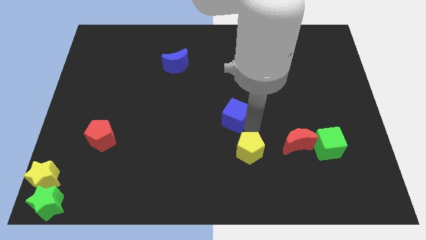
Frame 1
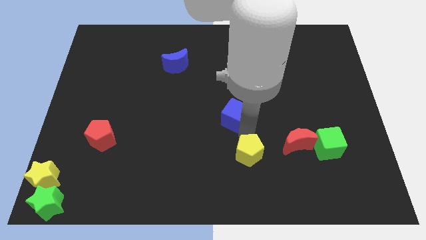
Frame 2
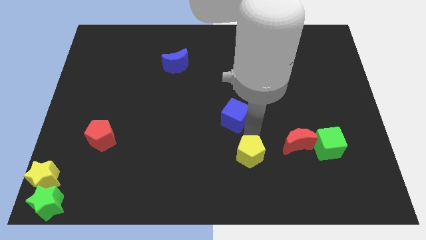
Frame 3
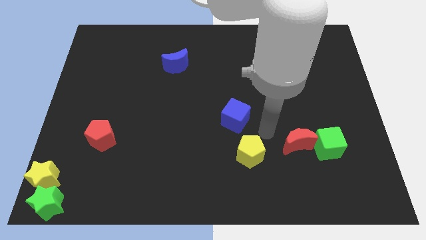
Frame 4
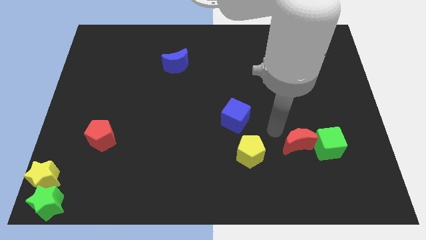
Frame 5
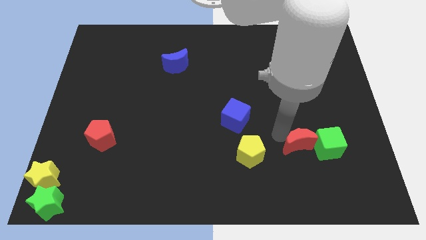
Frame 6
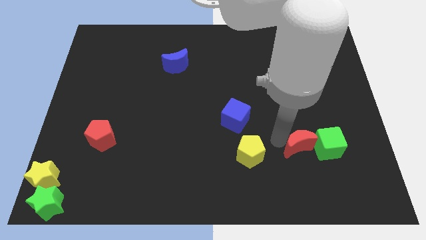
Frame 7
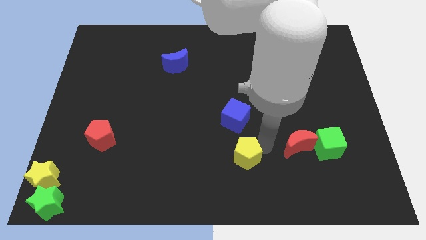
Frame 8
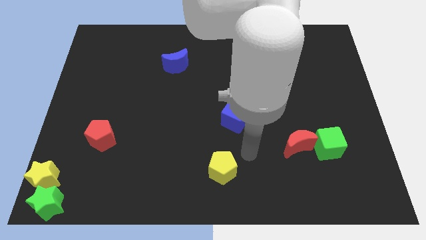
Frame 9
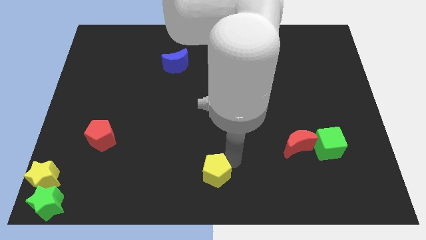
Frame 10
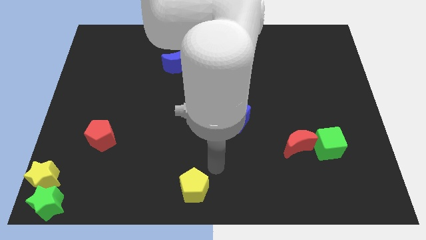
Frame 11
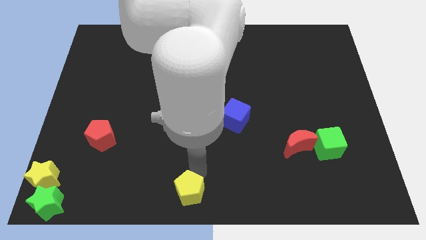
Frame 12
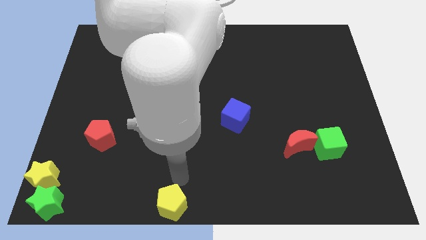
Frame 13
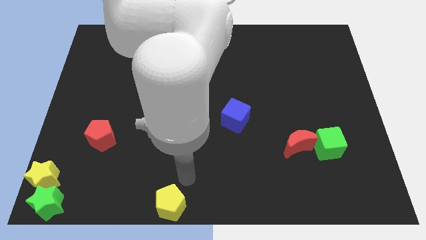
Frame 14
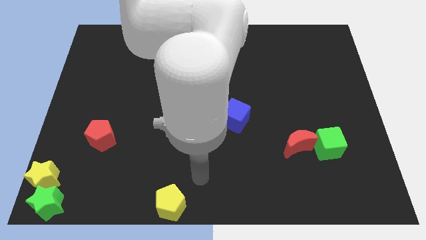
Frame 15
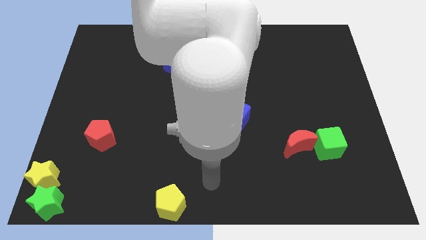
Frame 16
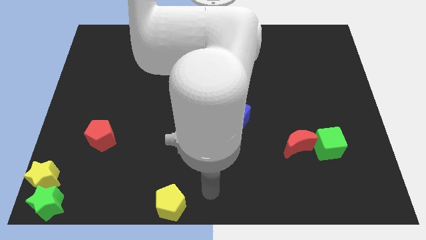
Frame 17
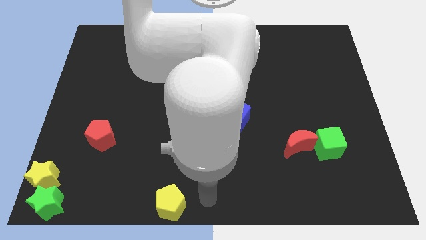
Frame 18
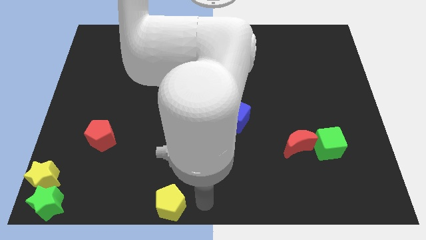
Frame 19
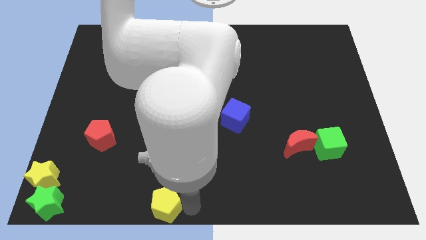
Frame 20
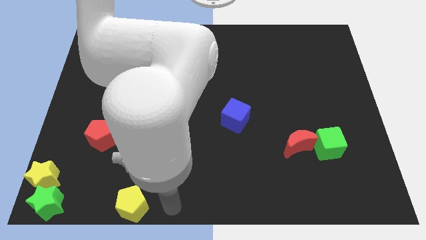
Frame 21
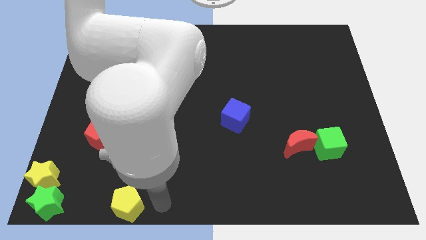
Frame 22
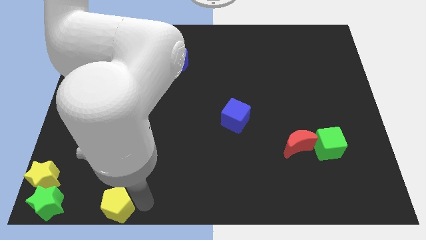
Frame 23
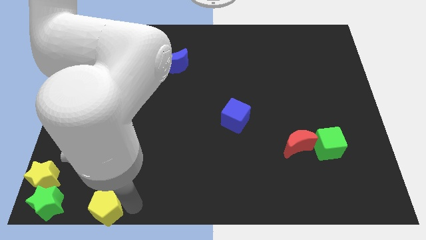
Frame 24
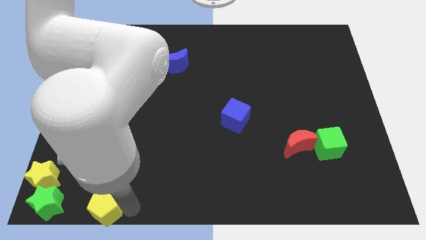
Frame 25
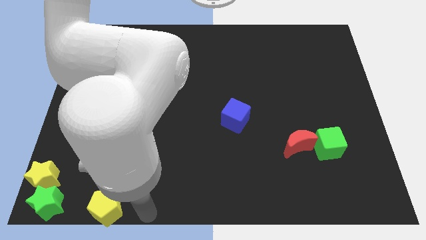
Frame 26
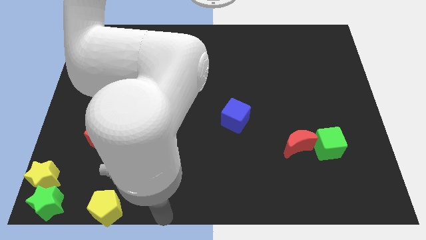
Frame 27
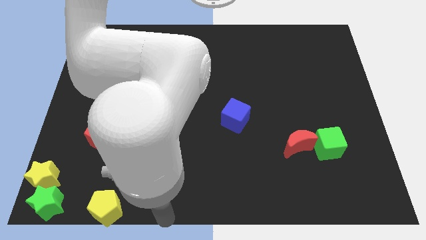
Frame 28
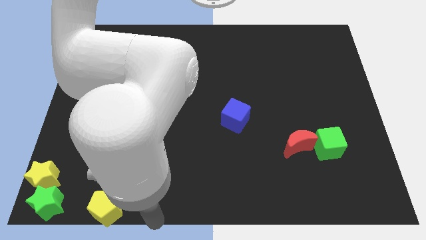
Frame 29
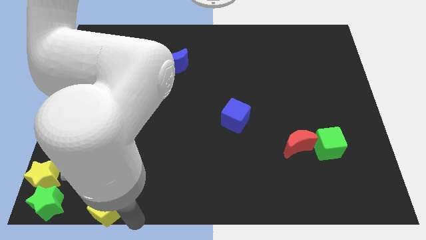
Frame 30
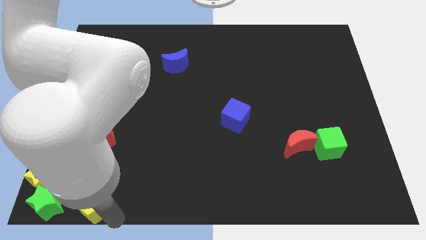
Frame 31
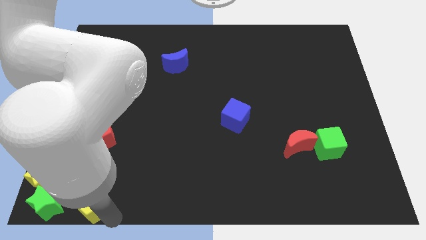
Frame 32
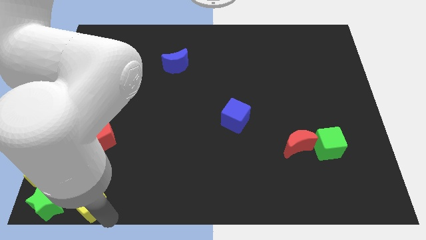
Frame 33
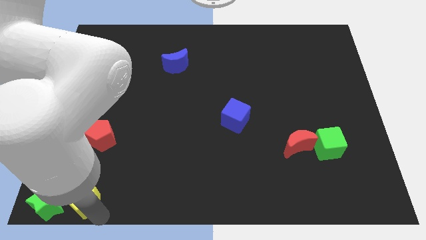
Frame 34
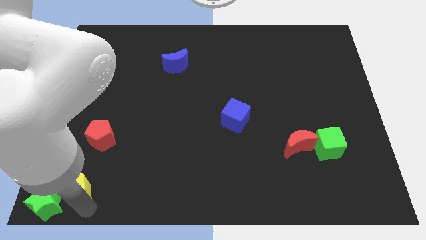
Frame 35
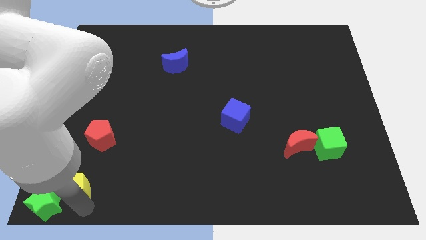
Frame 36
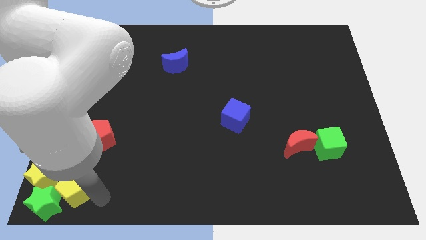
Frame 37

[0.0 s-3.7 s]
move yellow pentagon to the right of the green star

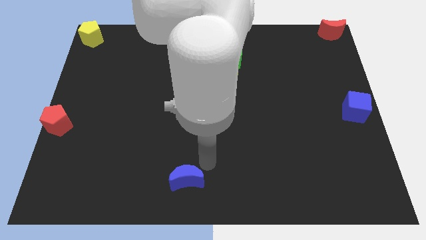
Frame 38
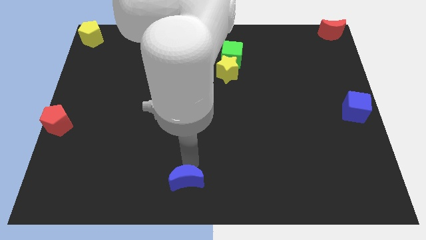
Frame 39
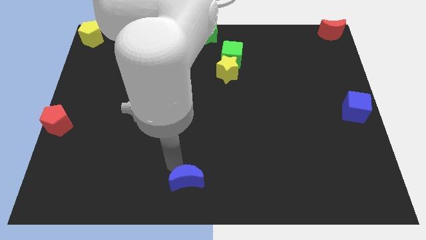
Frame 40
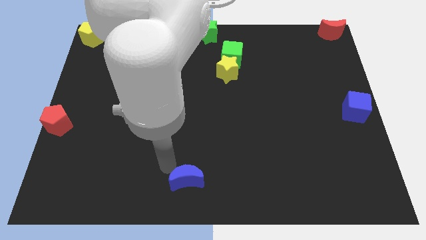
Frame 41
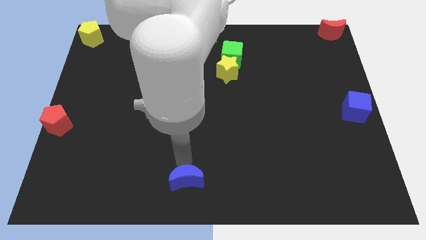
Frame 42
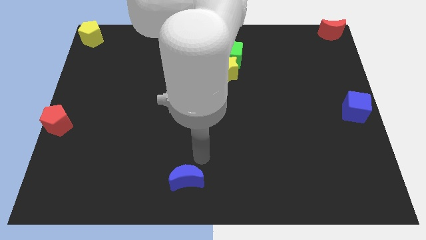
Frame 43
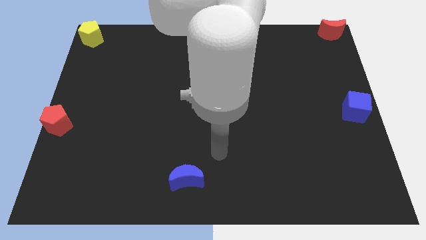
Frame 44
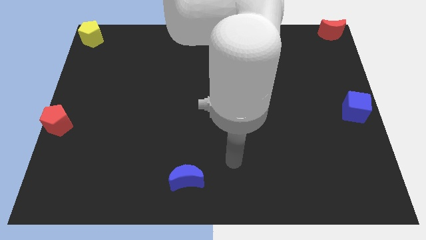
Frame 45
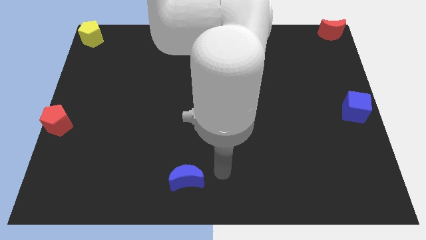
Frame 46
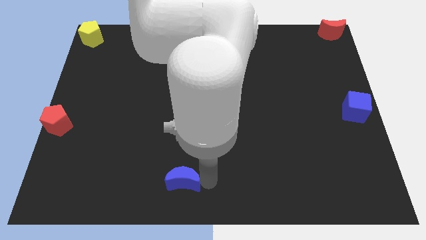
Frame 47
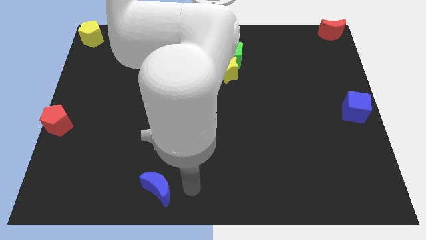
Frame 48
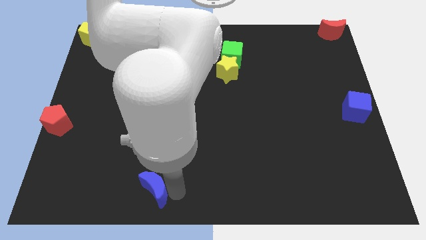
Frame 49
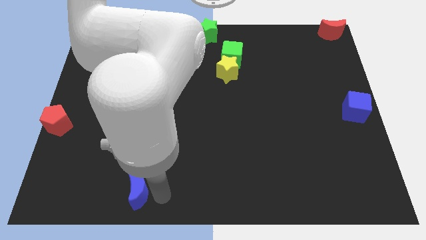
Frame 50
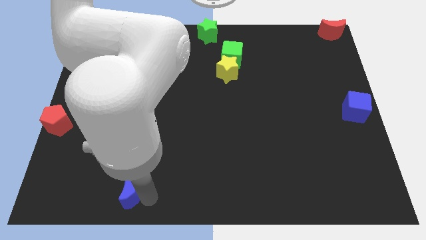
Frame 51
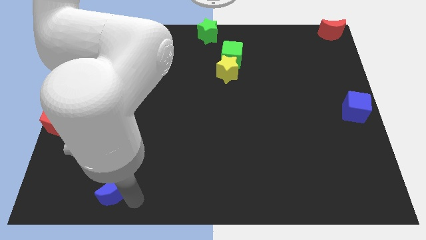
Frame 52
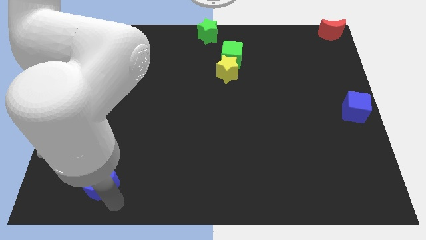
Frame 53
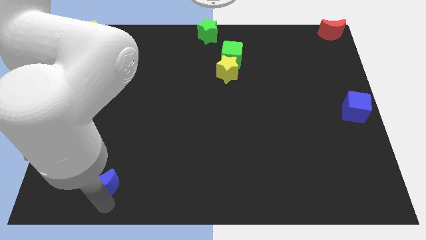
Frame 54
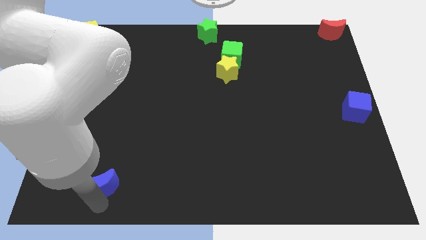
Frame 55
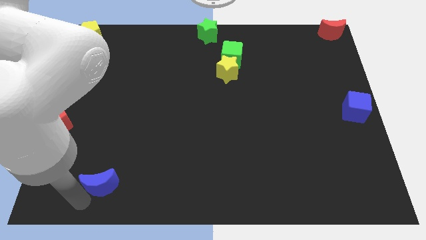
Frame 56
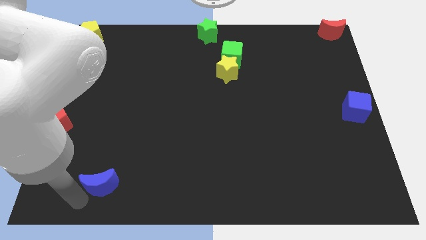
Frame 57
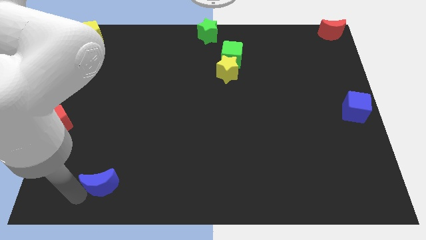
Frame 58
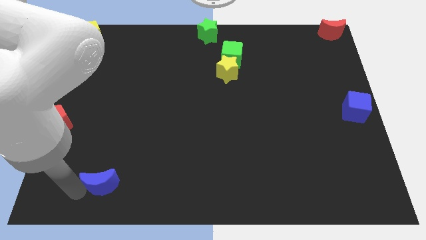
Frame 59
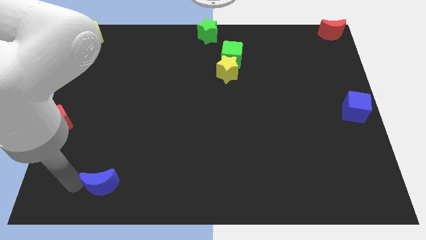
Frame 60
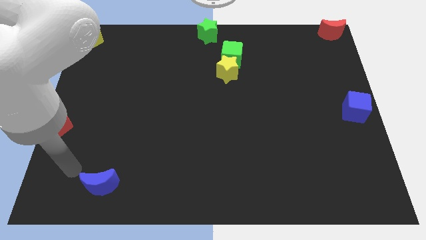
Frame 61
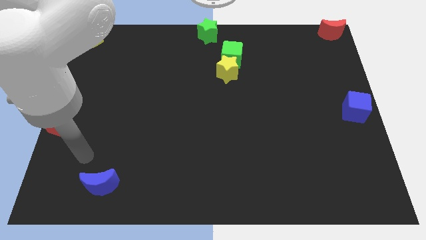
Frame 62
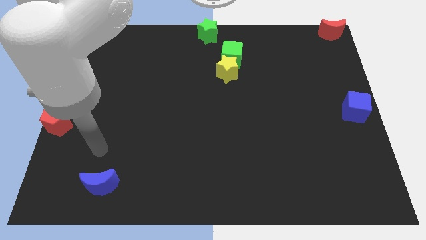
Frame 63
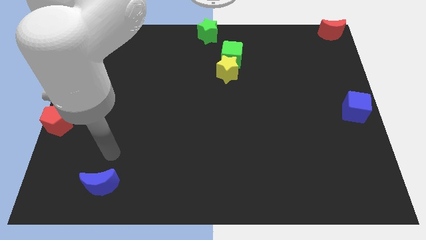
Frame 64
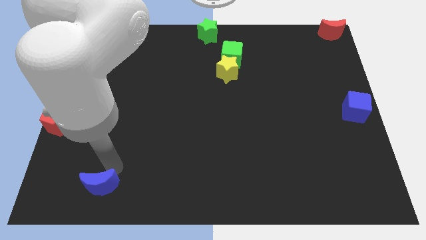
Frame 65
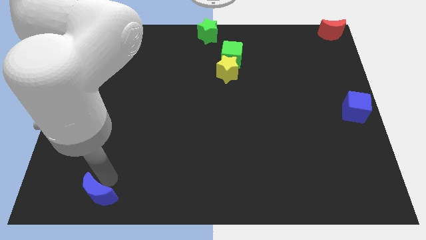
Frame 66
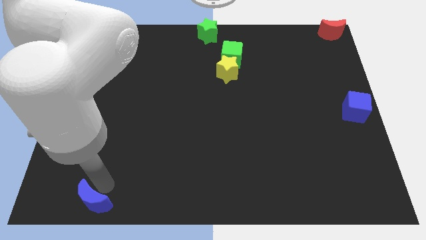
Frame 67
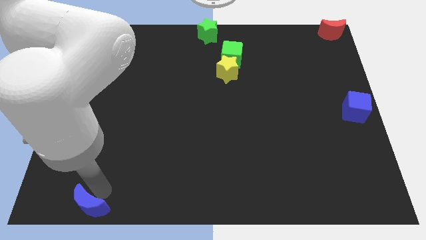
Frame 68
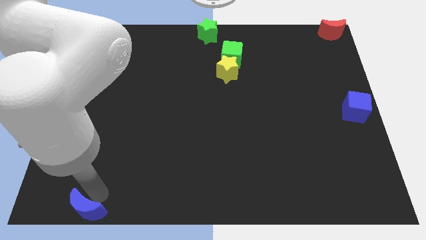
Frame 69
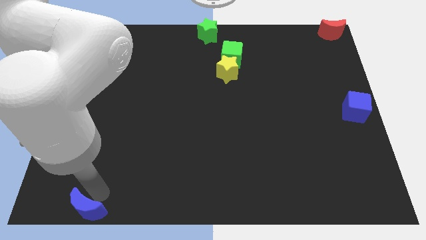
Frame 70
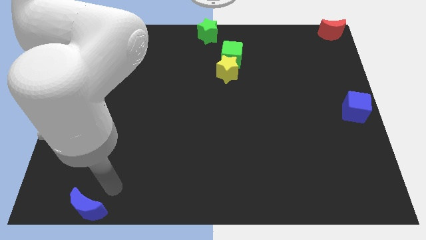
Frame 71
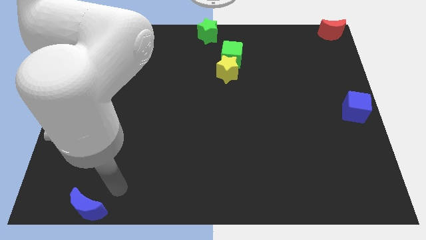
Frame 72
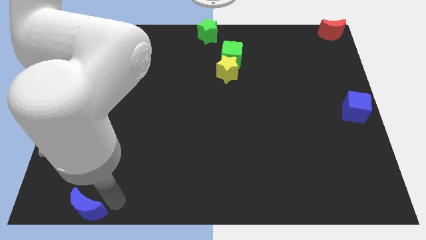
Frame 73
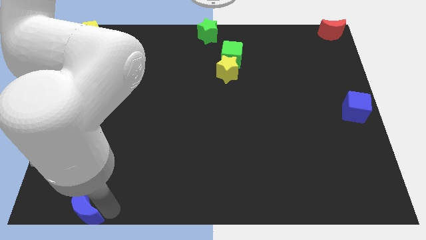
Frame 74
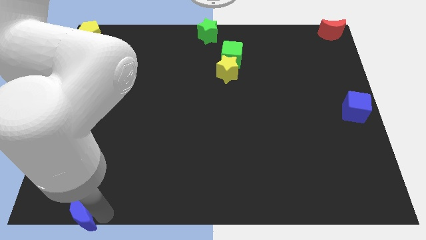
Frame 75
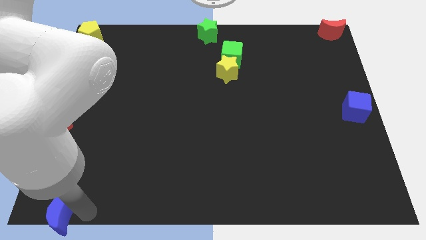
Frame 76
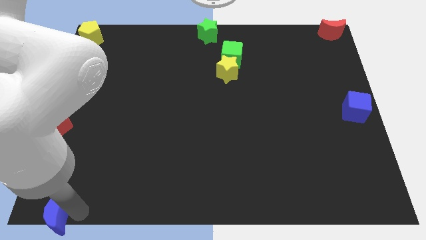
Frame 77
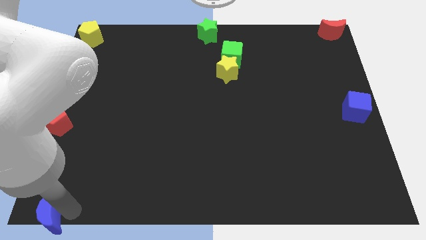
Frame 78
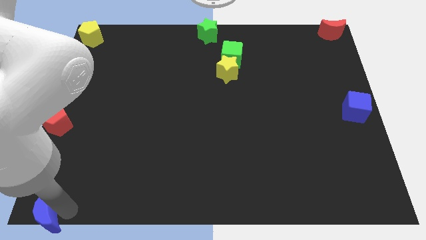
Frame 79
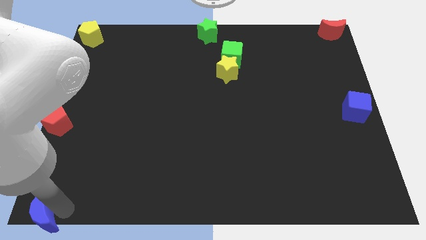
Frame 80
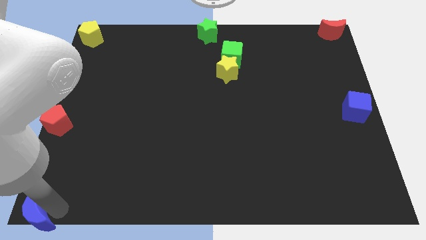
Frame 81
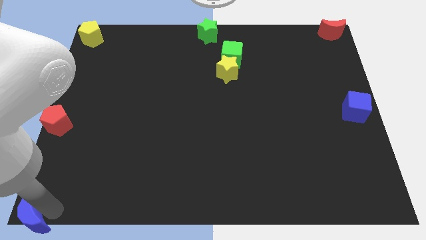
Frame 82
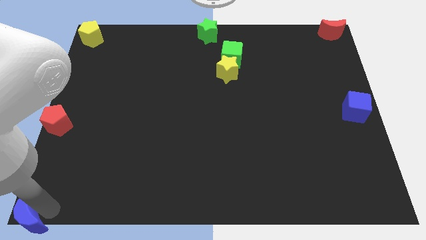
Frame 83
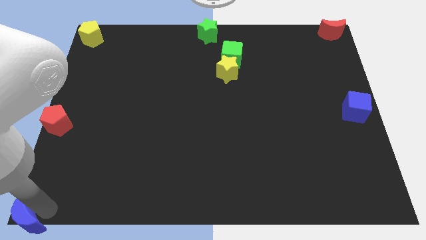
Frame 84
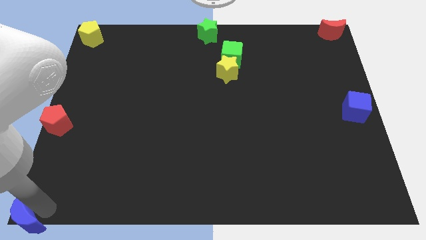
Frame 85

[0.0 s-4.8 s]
push the blue crescent to the bottom left of the board

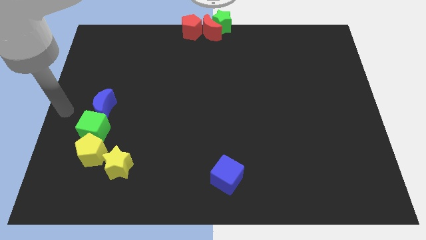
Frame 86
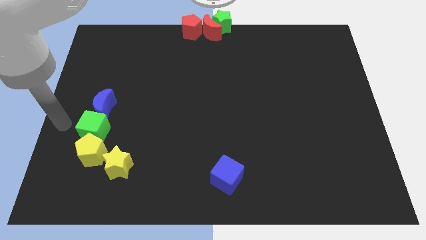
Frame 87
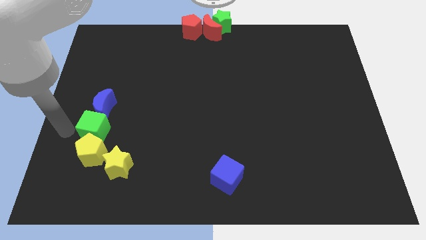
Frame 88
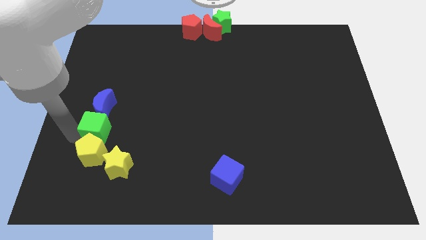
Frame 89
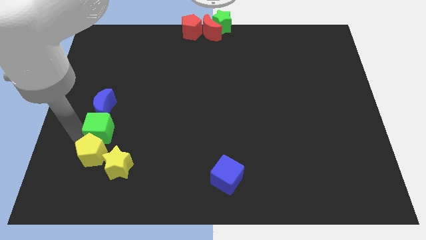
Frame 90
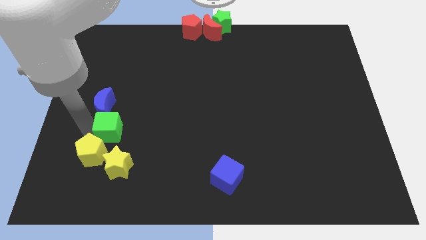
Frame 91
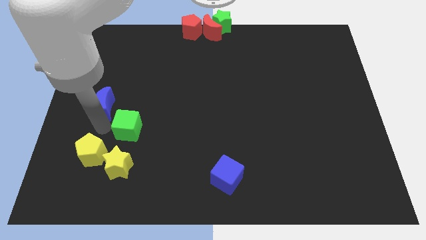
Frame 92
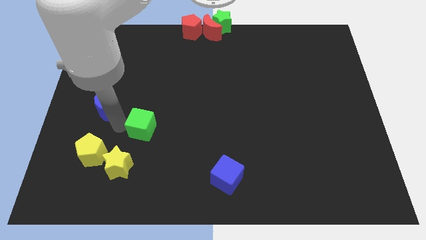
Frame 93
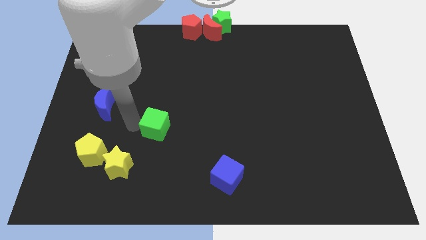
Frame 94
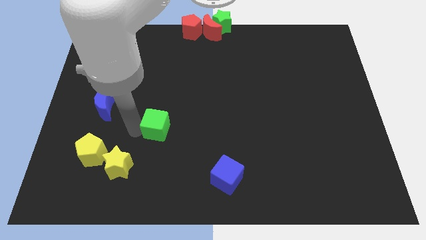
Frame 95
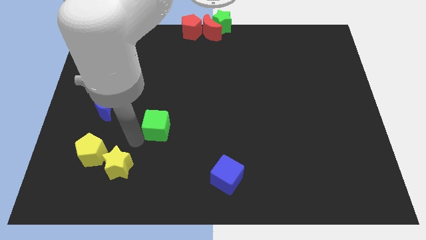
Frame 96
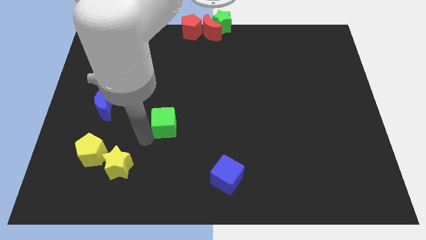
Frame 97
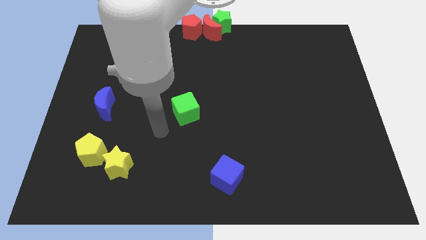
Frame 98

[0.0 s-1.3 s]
move the green cube diagonally top right to the yellow star
